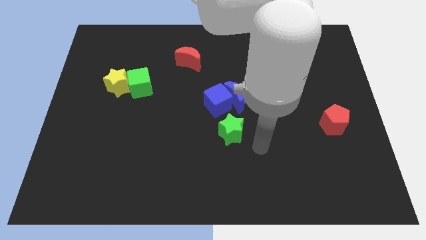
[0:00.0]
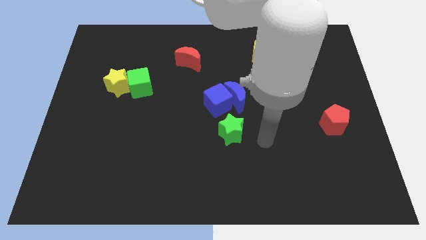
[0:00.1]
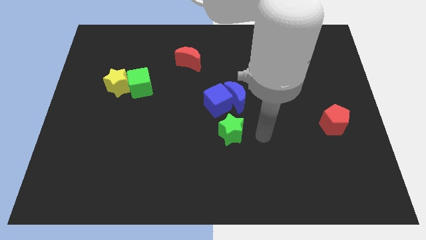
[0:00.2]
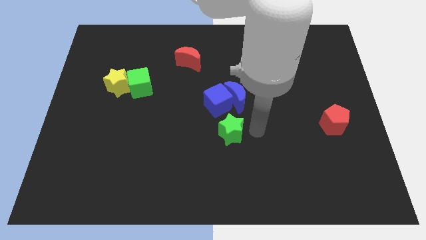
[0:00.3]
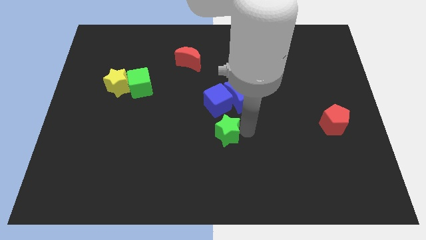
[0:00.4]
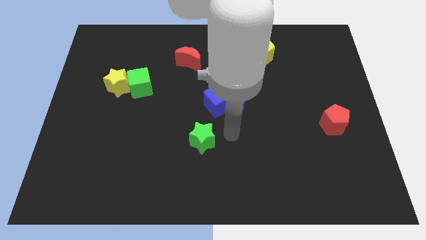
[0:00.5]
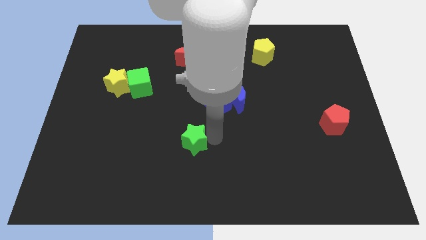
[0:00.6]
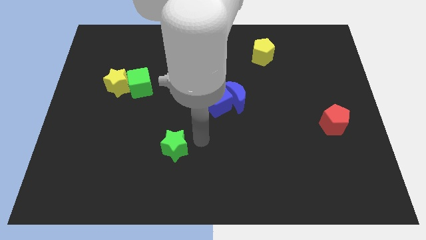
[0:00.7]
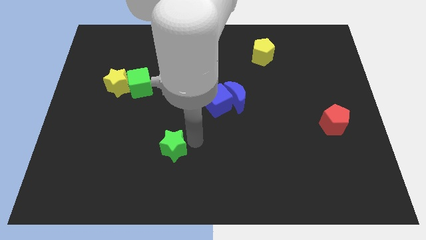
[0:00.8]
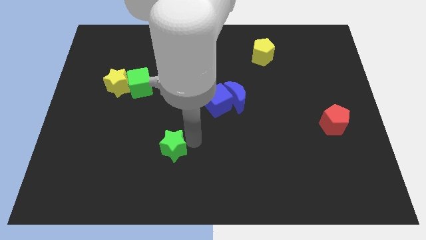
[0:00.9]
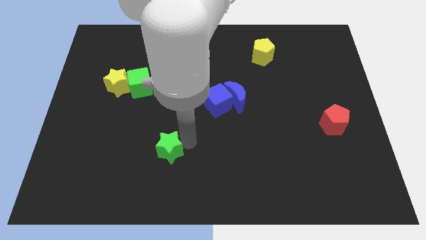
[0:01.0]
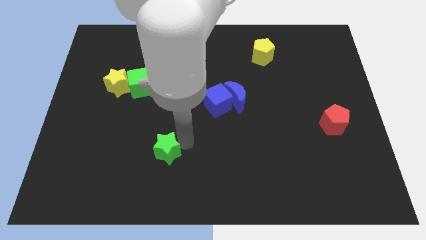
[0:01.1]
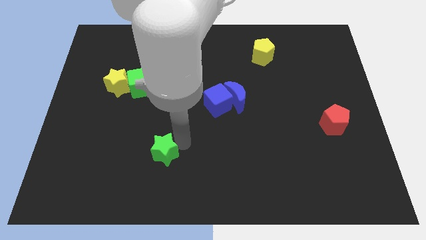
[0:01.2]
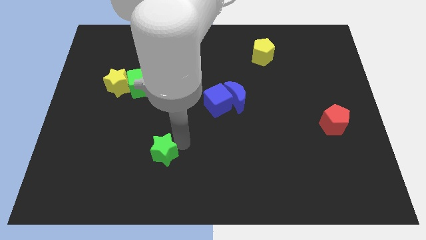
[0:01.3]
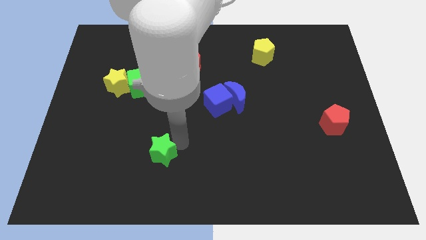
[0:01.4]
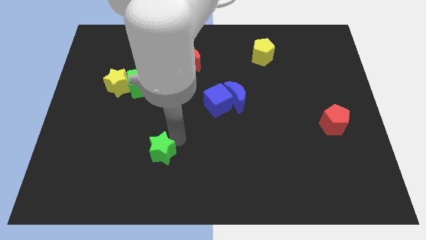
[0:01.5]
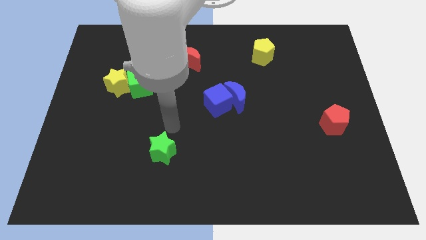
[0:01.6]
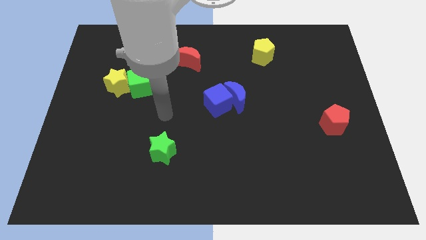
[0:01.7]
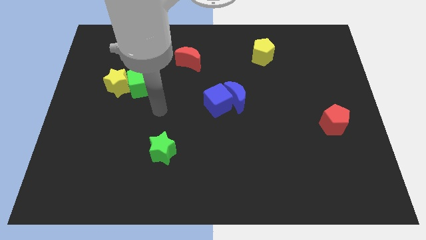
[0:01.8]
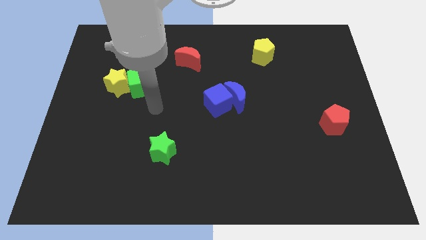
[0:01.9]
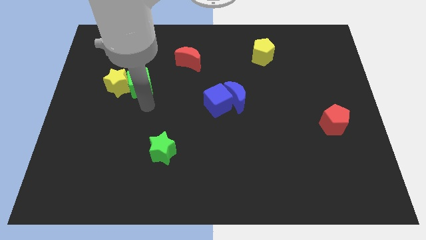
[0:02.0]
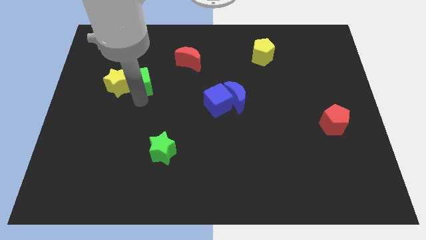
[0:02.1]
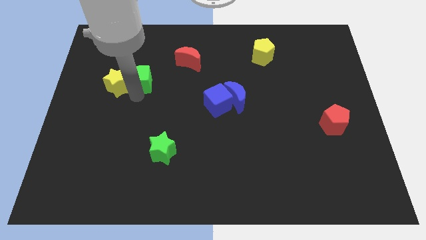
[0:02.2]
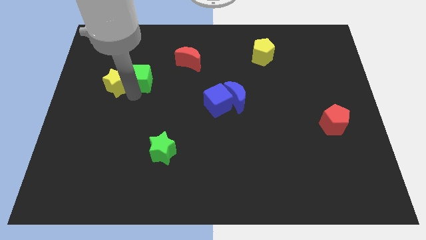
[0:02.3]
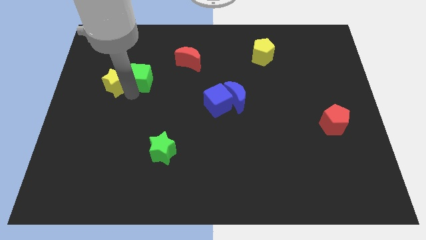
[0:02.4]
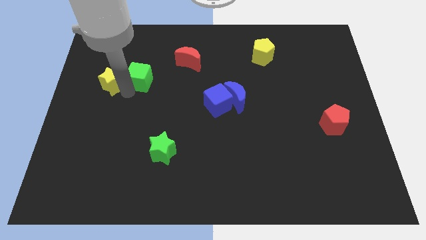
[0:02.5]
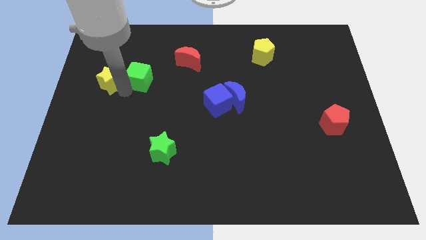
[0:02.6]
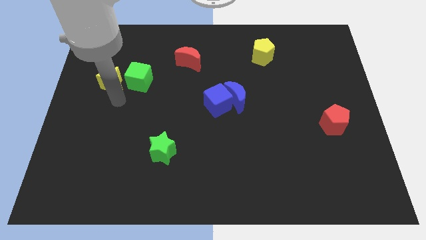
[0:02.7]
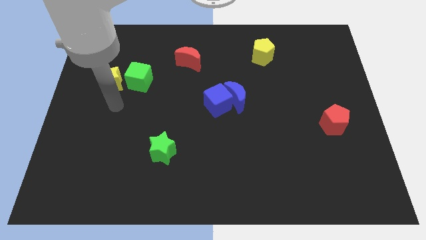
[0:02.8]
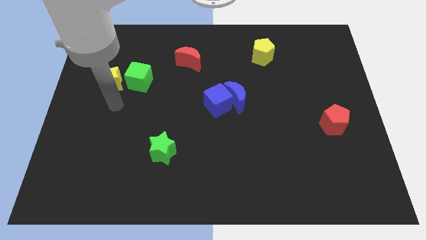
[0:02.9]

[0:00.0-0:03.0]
place green star to the bottom of green cube

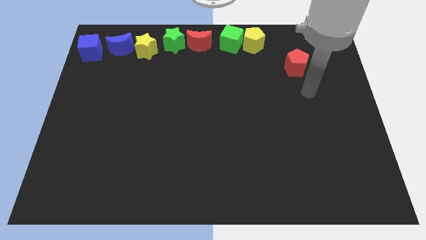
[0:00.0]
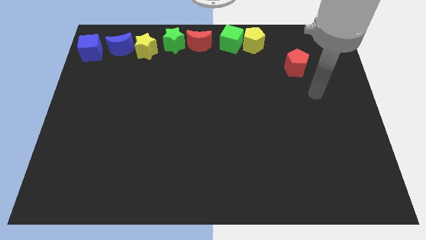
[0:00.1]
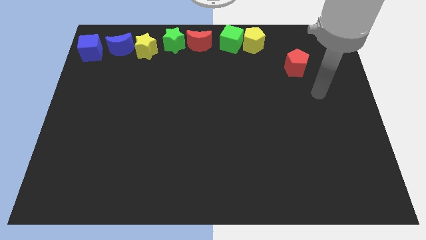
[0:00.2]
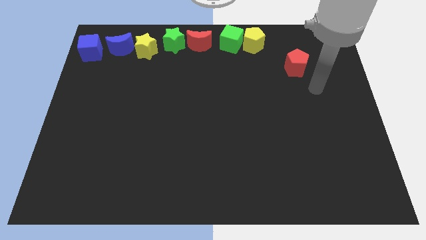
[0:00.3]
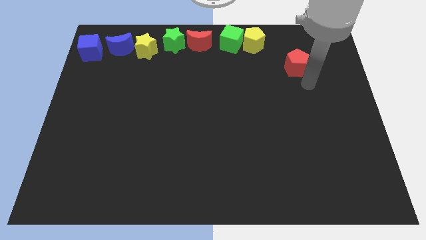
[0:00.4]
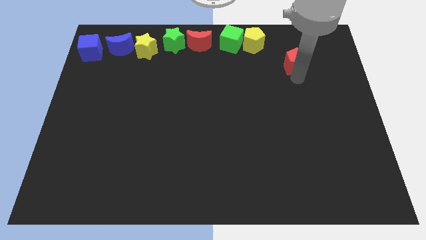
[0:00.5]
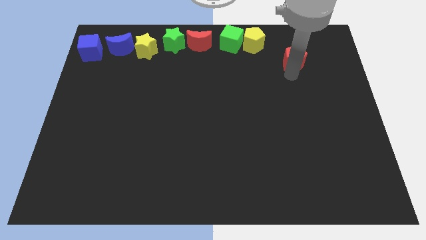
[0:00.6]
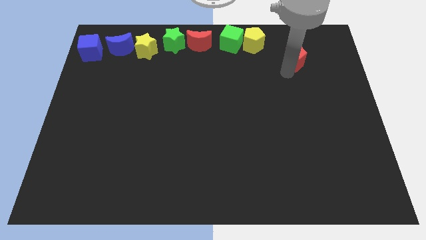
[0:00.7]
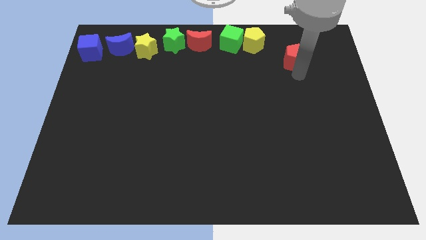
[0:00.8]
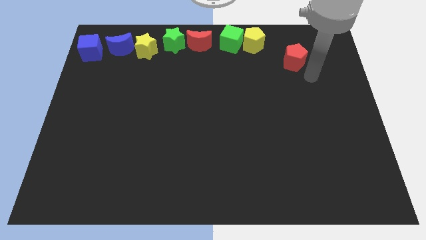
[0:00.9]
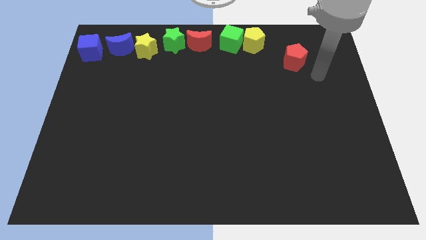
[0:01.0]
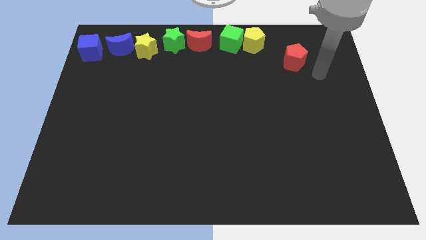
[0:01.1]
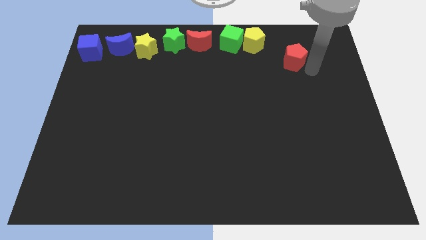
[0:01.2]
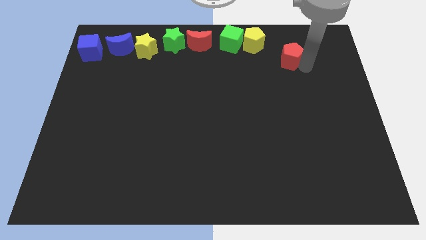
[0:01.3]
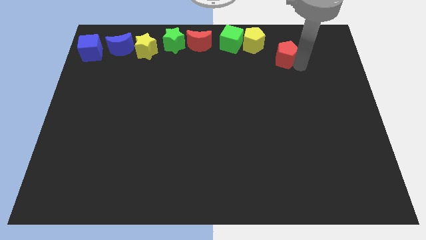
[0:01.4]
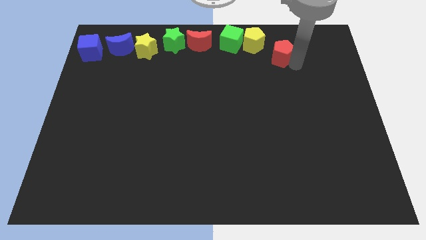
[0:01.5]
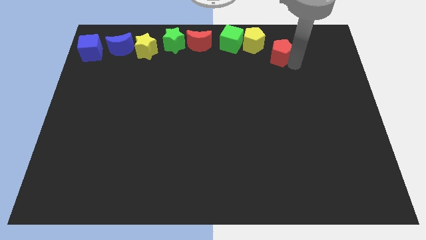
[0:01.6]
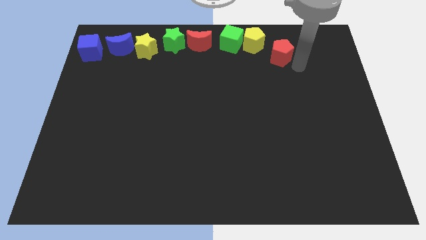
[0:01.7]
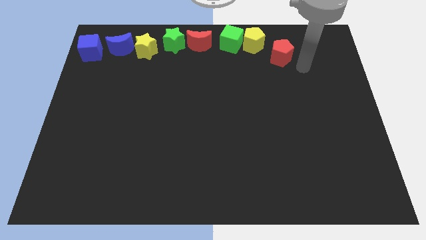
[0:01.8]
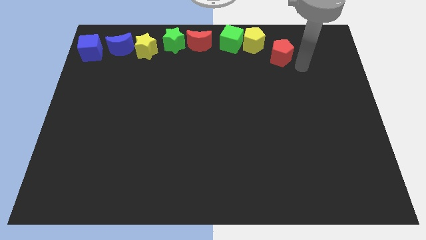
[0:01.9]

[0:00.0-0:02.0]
push the red pentagon close to the yellow pentagon

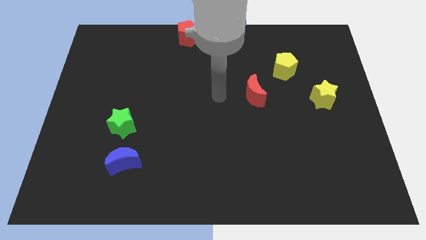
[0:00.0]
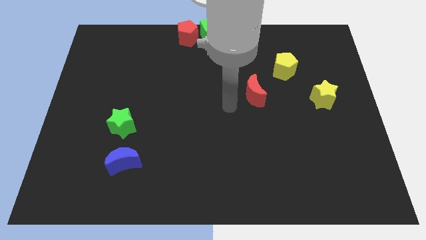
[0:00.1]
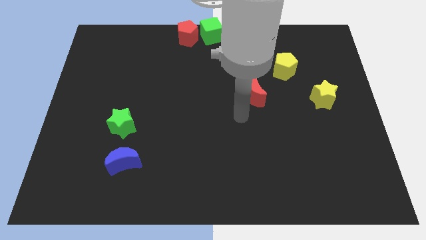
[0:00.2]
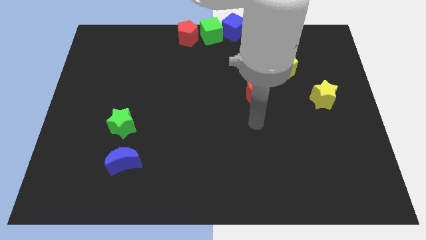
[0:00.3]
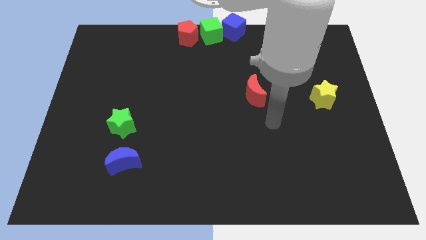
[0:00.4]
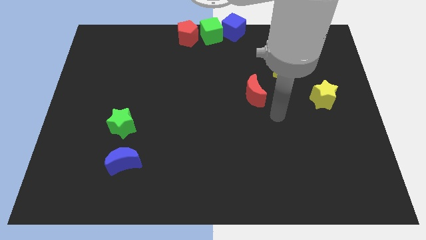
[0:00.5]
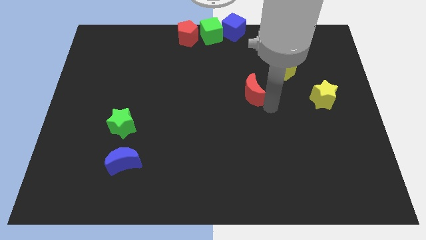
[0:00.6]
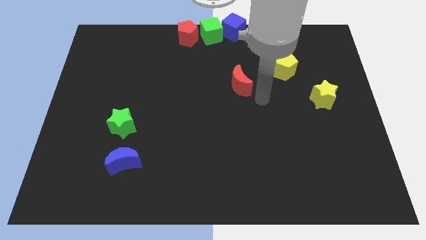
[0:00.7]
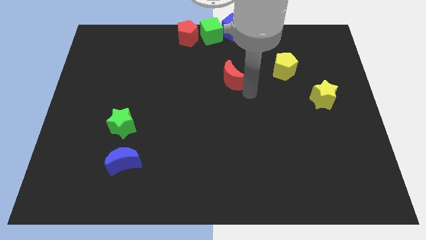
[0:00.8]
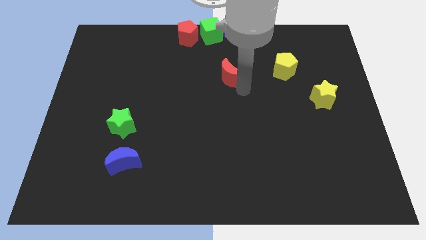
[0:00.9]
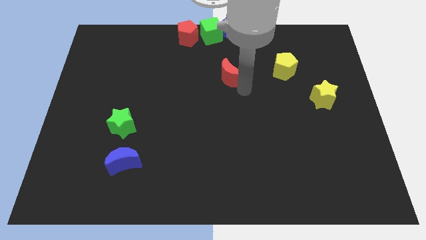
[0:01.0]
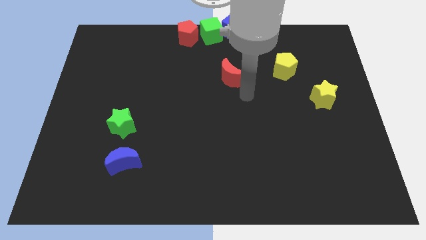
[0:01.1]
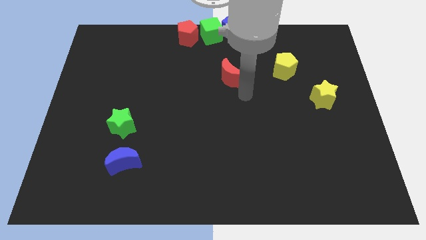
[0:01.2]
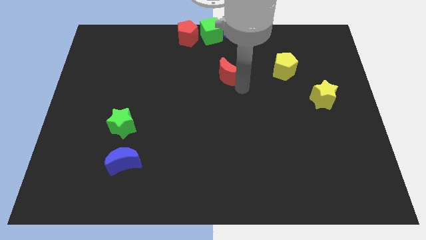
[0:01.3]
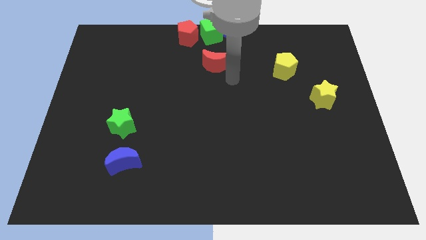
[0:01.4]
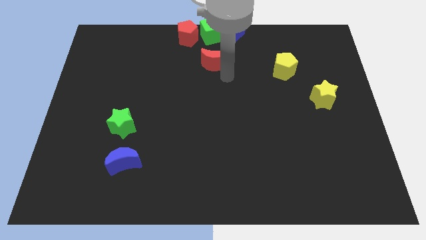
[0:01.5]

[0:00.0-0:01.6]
place red moon below the green cube

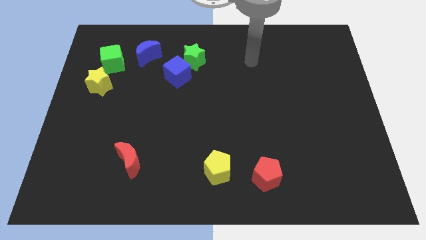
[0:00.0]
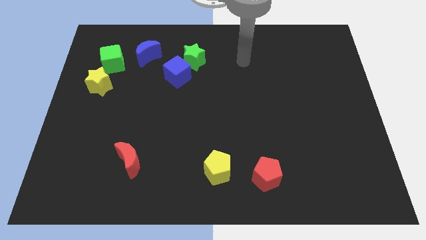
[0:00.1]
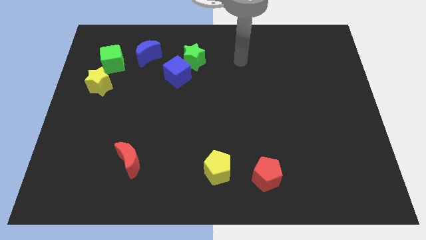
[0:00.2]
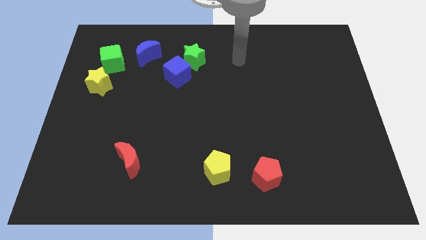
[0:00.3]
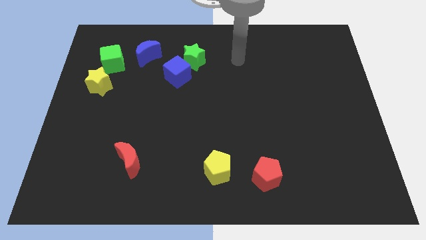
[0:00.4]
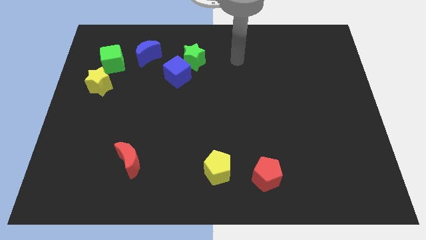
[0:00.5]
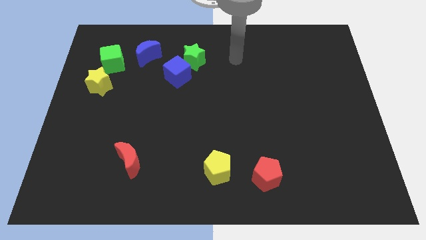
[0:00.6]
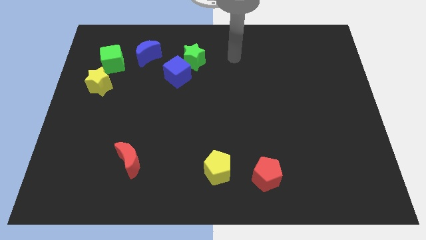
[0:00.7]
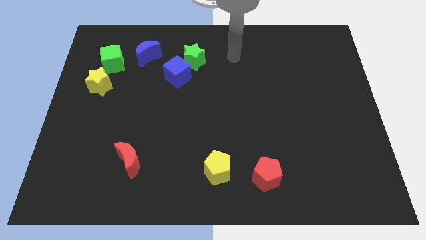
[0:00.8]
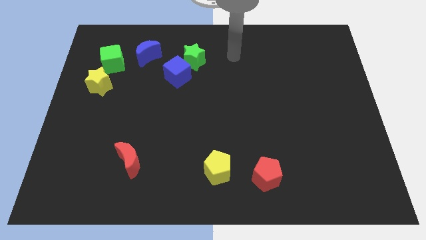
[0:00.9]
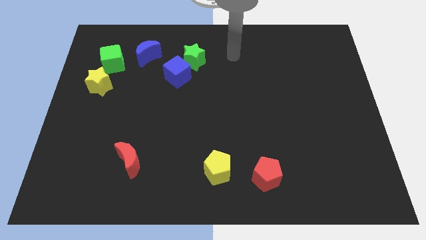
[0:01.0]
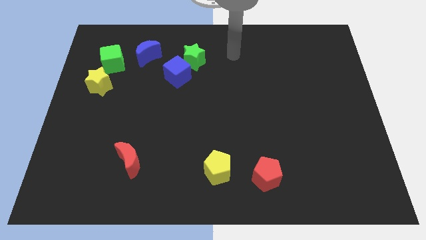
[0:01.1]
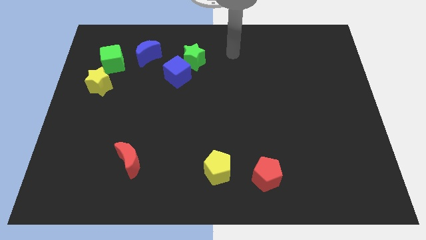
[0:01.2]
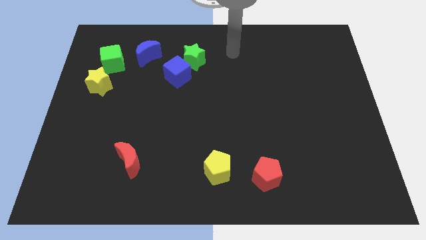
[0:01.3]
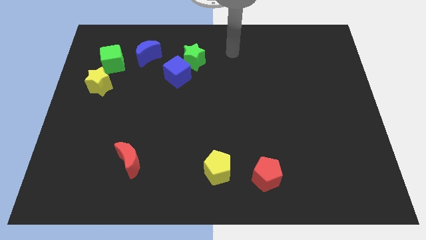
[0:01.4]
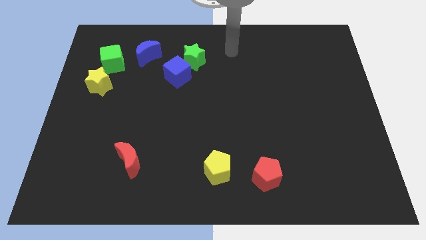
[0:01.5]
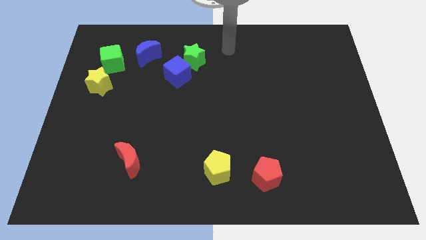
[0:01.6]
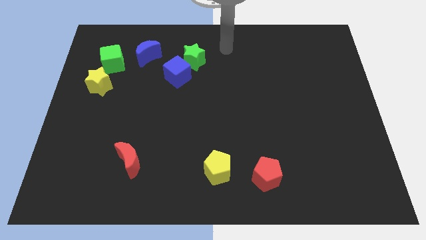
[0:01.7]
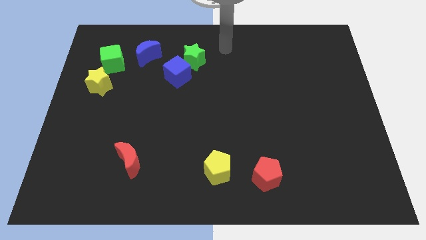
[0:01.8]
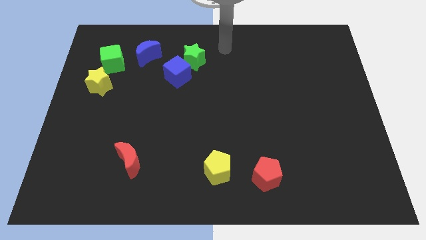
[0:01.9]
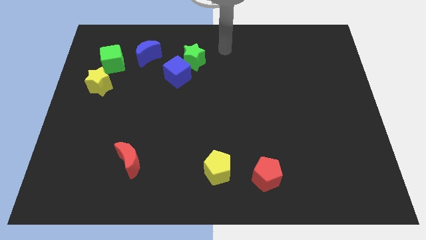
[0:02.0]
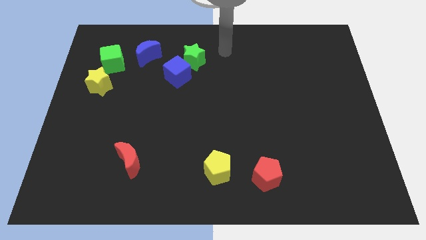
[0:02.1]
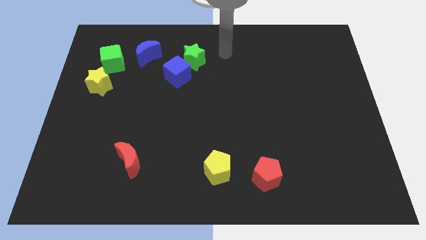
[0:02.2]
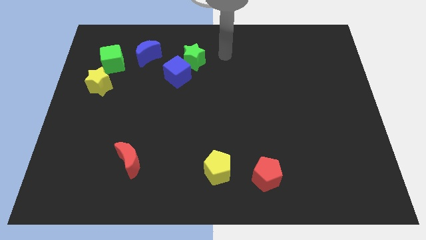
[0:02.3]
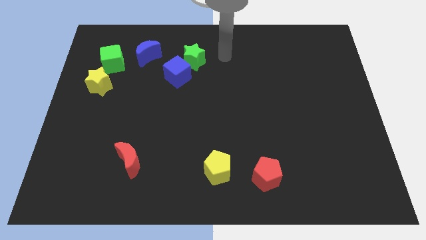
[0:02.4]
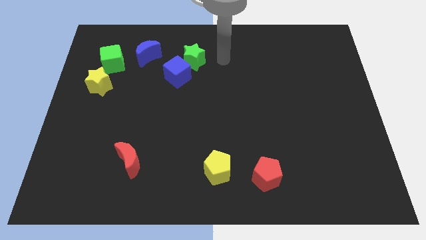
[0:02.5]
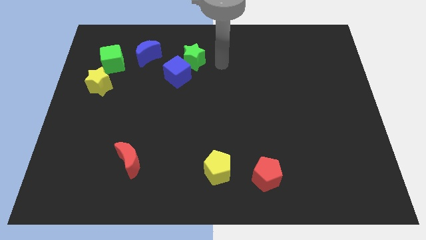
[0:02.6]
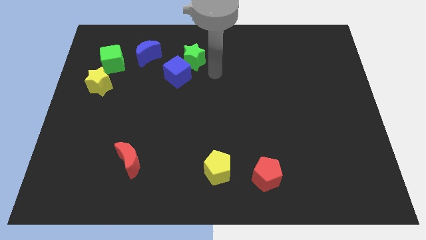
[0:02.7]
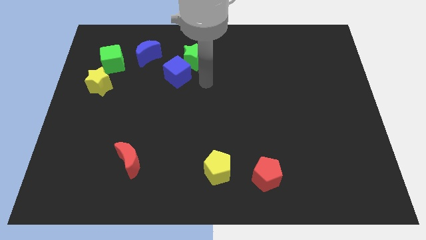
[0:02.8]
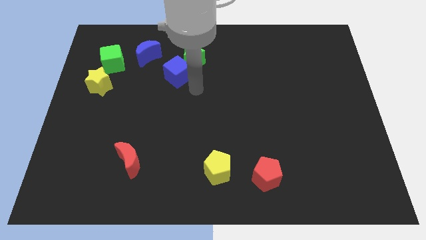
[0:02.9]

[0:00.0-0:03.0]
move arm to the green star
